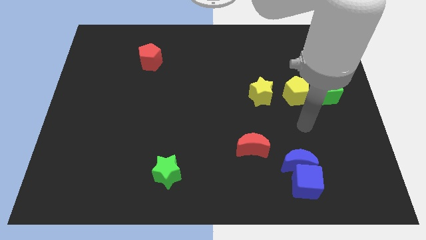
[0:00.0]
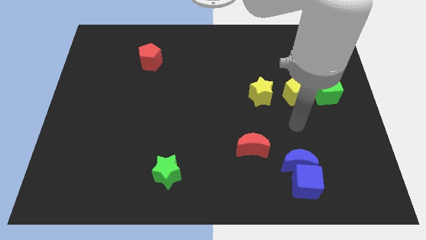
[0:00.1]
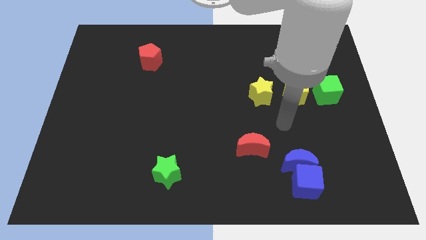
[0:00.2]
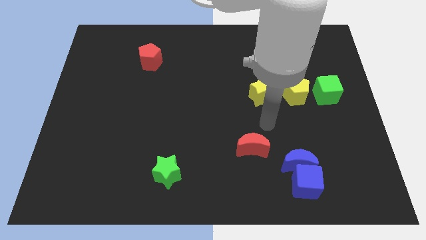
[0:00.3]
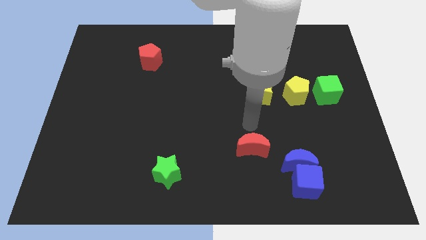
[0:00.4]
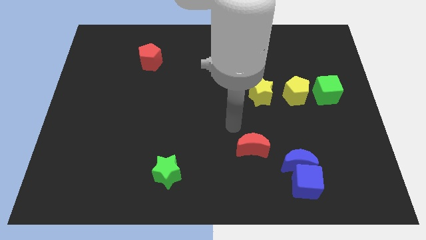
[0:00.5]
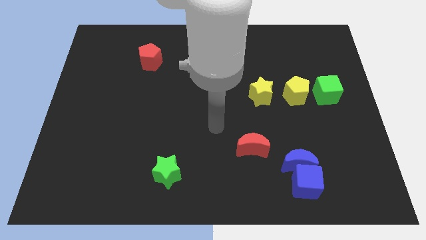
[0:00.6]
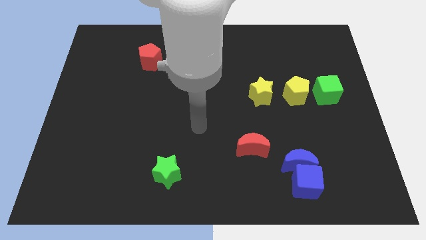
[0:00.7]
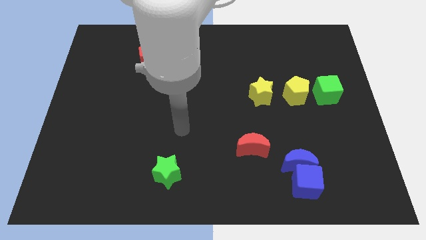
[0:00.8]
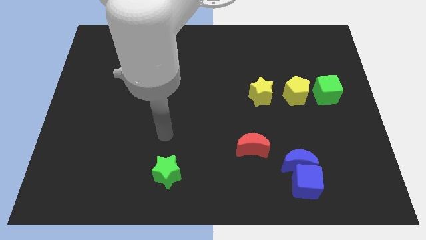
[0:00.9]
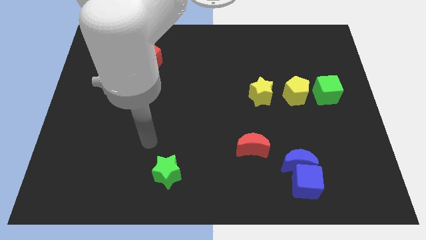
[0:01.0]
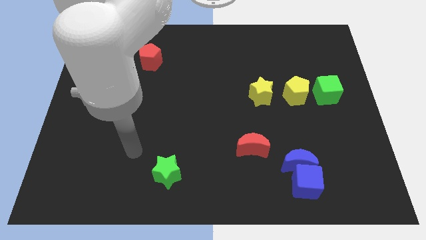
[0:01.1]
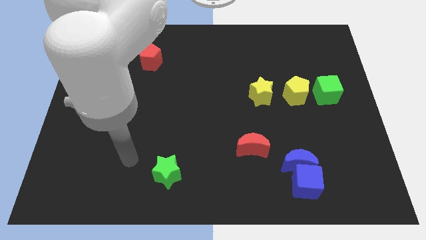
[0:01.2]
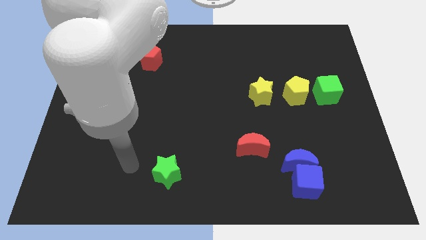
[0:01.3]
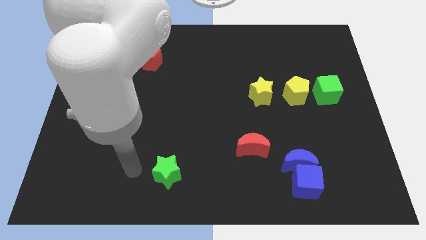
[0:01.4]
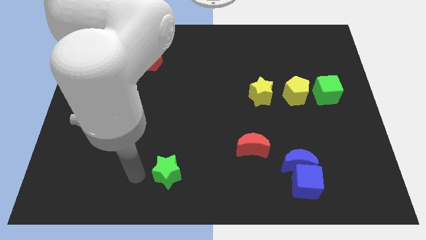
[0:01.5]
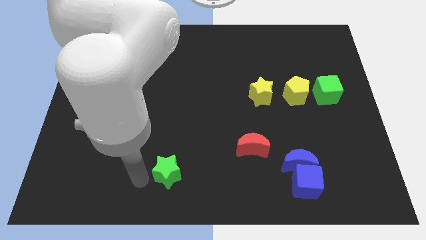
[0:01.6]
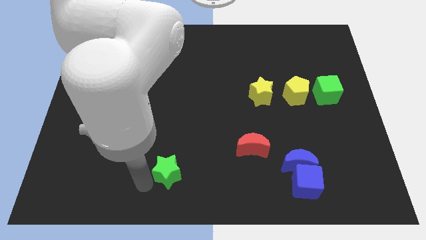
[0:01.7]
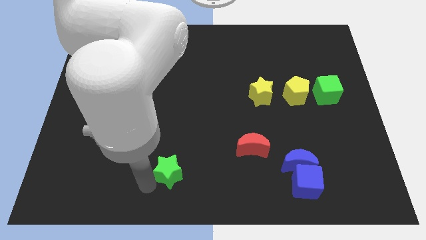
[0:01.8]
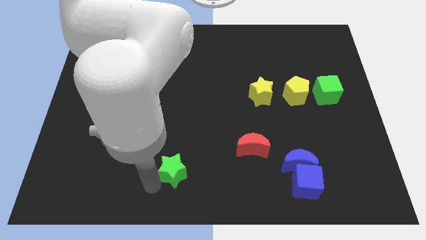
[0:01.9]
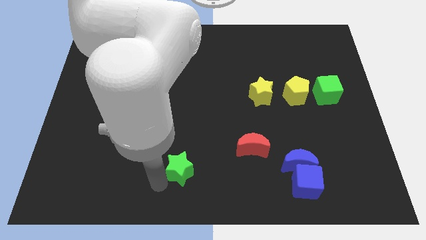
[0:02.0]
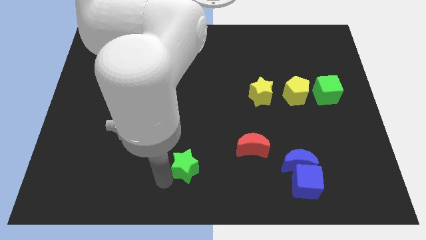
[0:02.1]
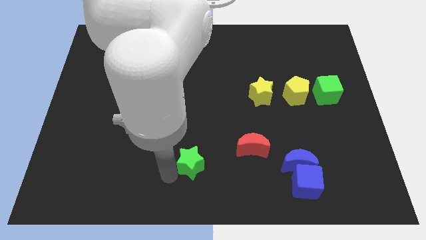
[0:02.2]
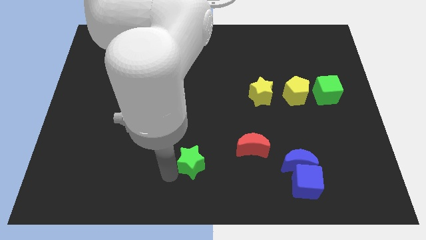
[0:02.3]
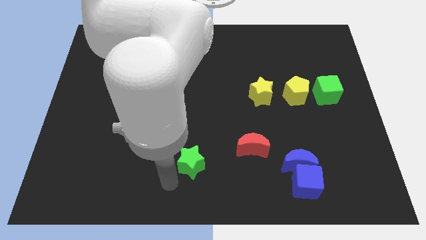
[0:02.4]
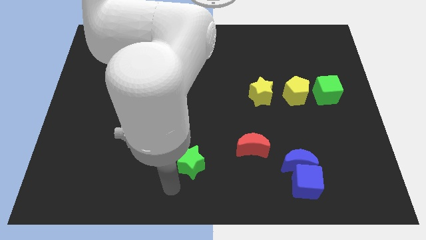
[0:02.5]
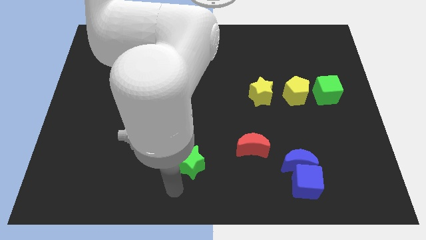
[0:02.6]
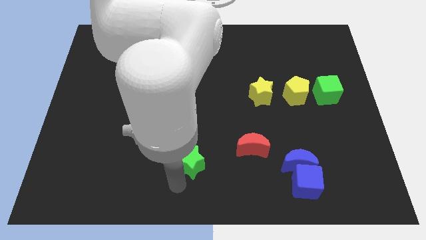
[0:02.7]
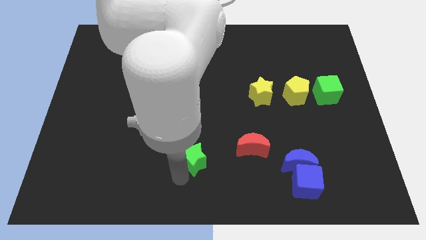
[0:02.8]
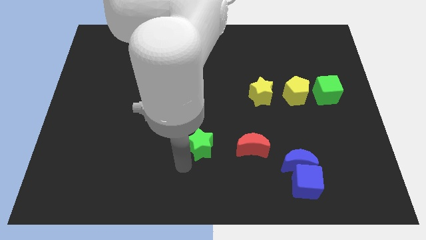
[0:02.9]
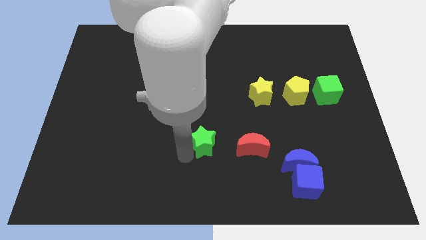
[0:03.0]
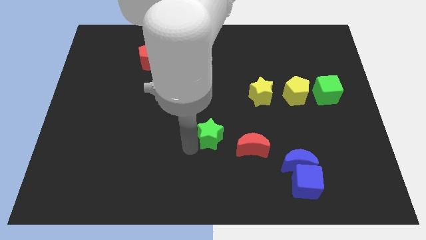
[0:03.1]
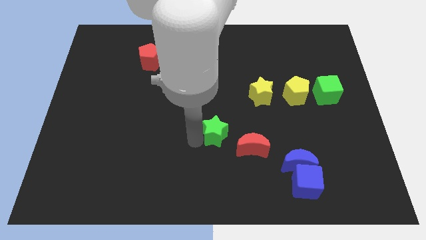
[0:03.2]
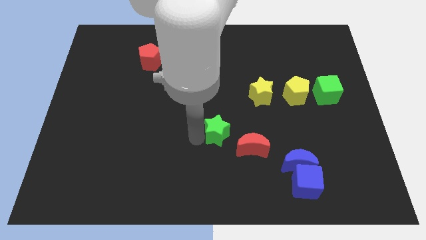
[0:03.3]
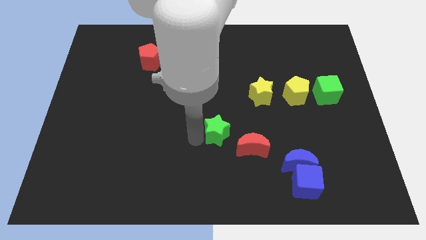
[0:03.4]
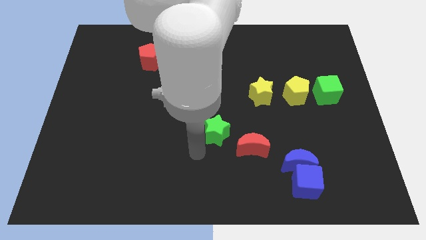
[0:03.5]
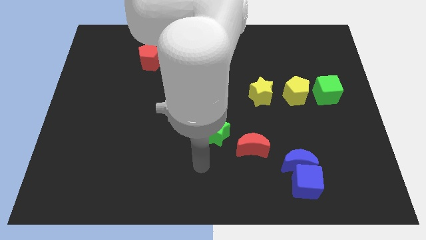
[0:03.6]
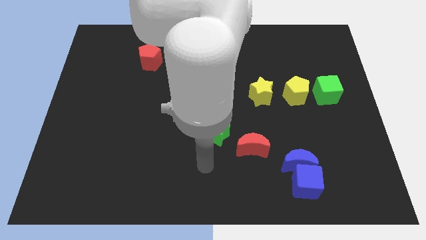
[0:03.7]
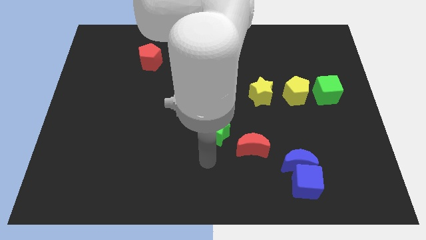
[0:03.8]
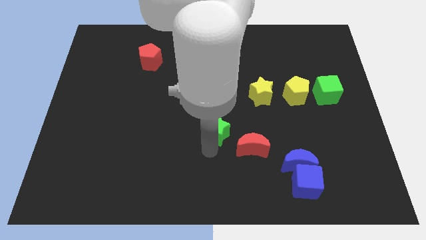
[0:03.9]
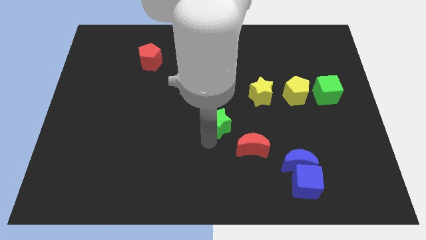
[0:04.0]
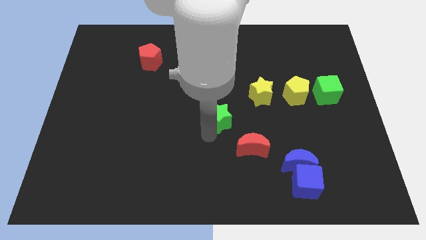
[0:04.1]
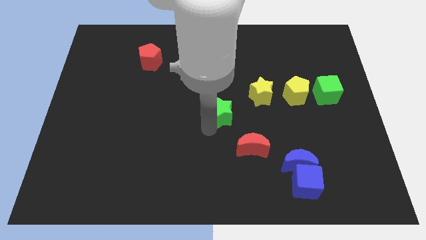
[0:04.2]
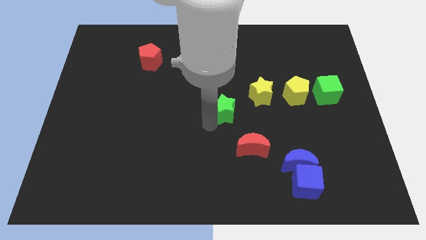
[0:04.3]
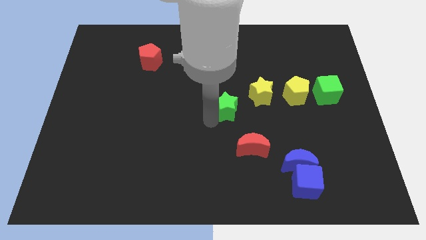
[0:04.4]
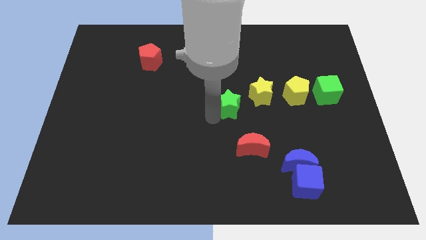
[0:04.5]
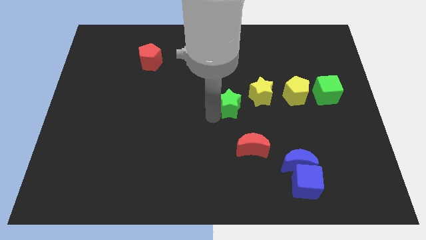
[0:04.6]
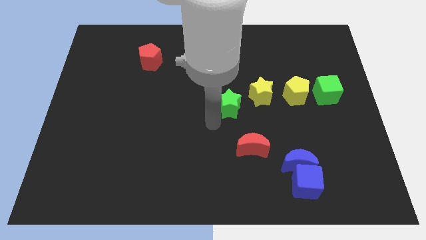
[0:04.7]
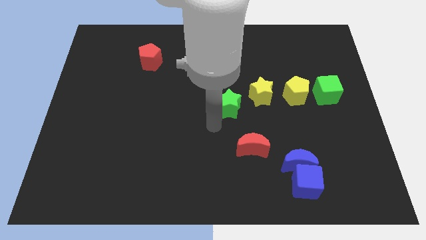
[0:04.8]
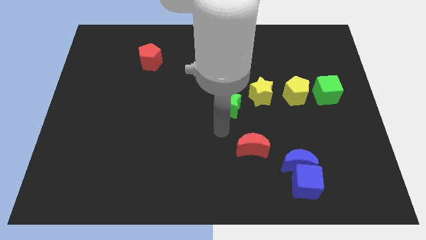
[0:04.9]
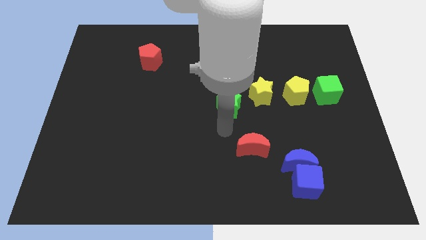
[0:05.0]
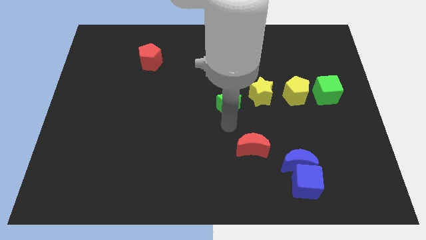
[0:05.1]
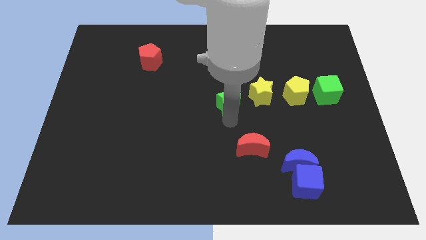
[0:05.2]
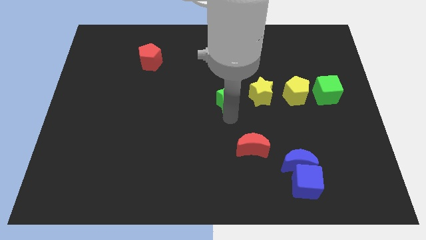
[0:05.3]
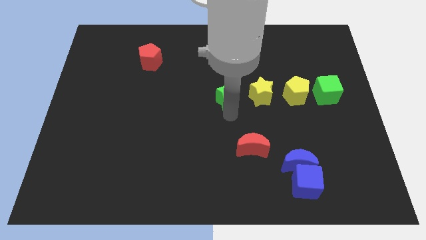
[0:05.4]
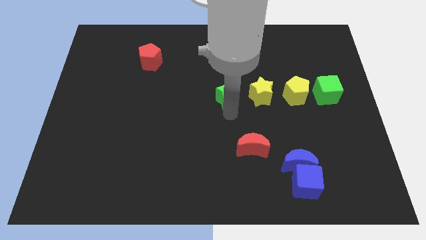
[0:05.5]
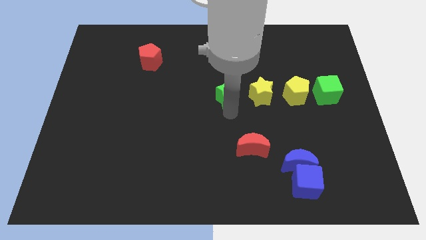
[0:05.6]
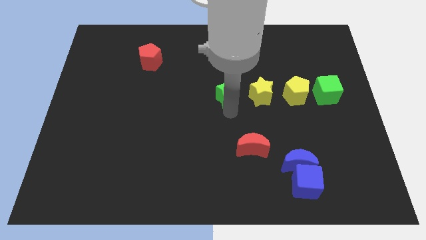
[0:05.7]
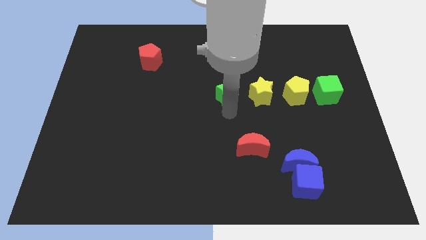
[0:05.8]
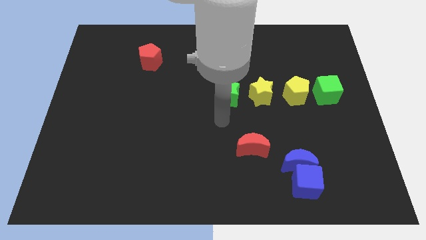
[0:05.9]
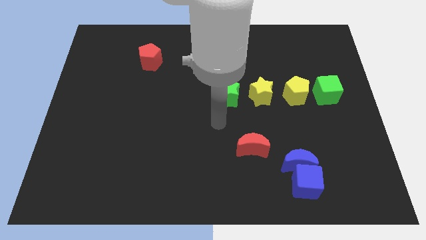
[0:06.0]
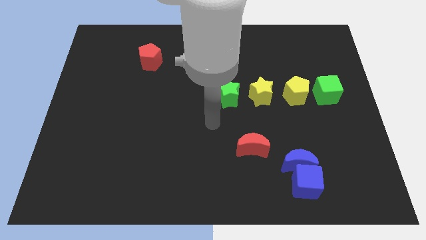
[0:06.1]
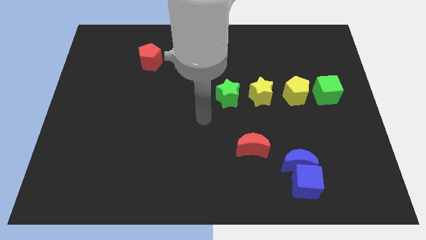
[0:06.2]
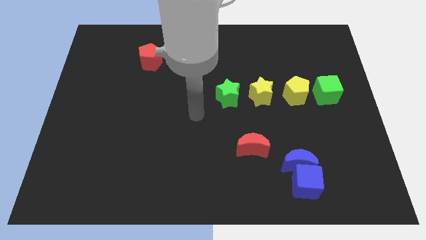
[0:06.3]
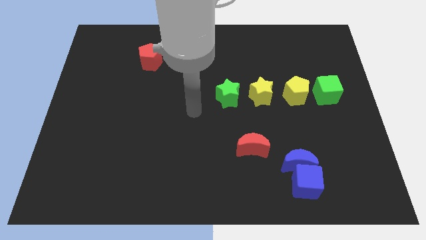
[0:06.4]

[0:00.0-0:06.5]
place green star beside the yellow star to form a horizontal line

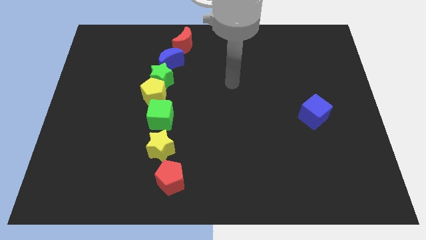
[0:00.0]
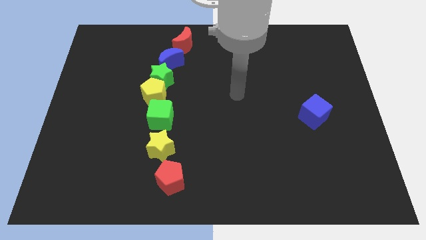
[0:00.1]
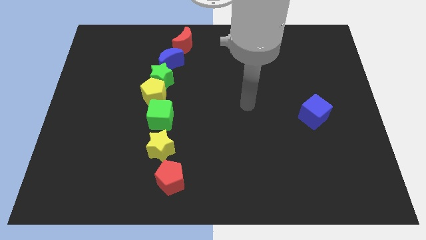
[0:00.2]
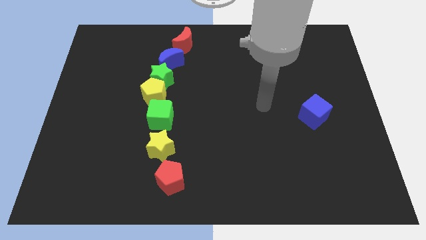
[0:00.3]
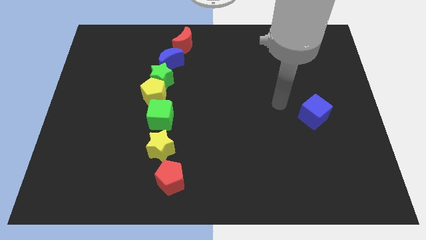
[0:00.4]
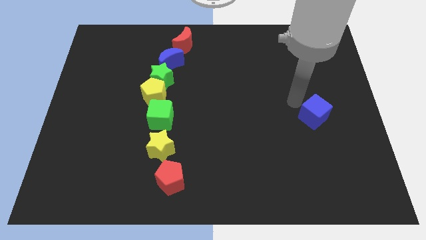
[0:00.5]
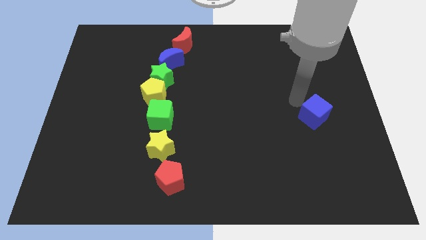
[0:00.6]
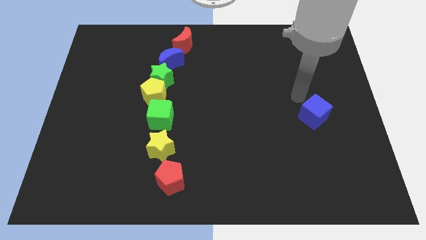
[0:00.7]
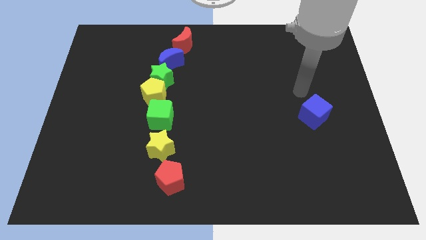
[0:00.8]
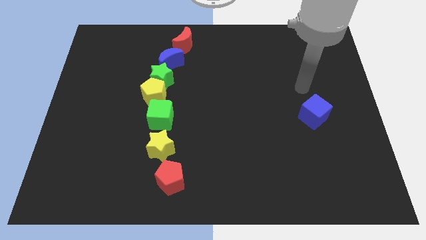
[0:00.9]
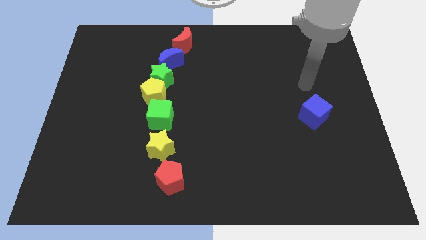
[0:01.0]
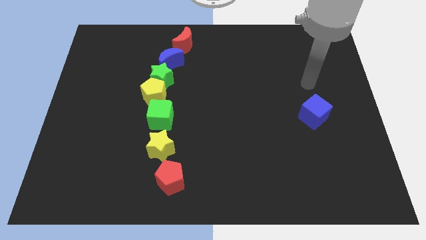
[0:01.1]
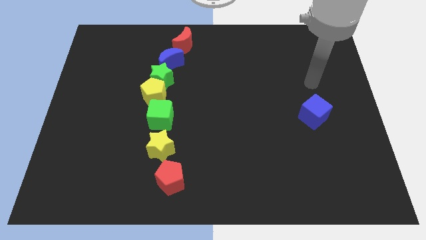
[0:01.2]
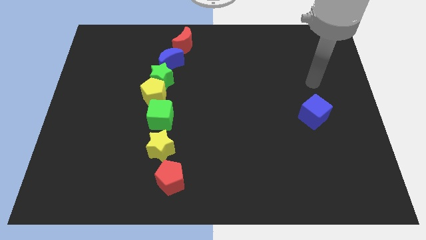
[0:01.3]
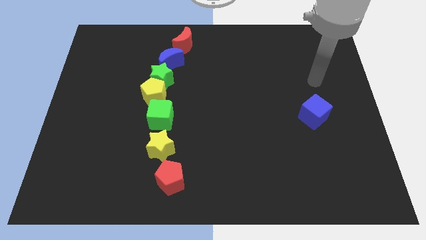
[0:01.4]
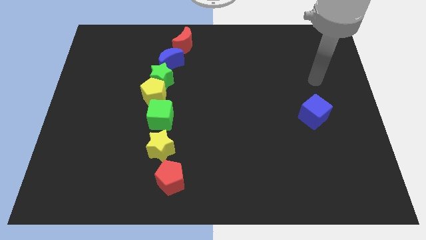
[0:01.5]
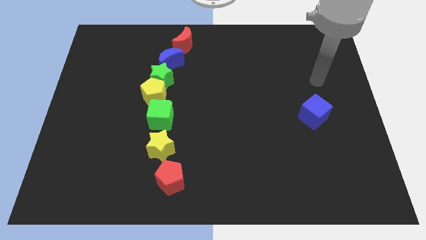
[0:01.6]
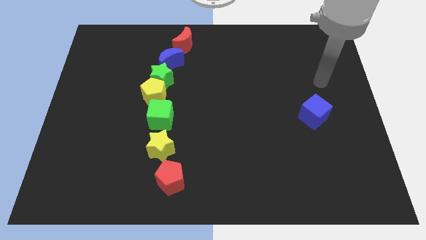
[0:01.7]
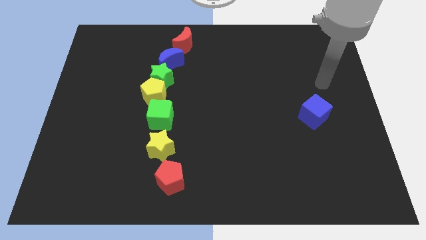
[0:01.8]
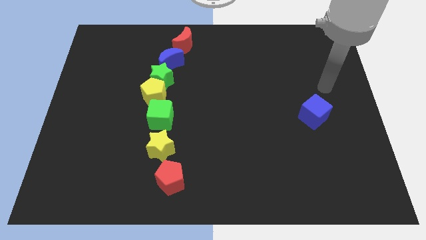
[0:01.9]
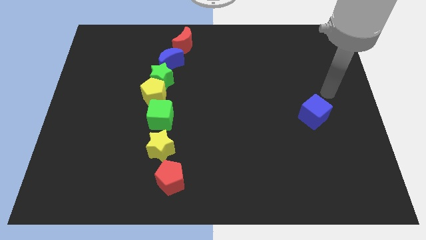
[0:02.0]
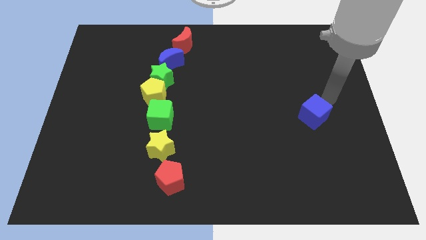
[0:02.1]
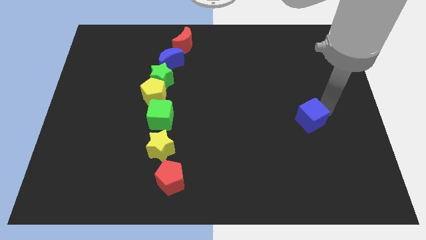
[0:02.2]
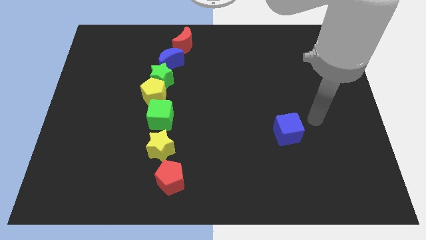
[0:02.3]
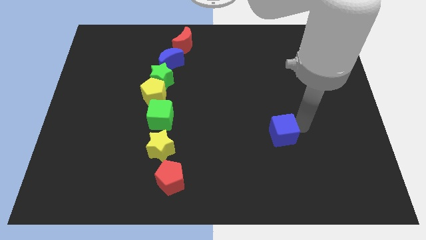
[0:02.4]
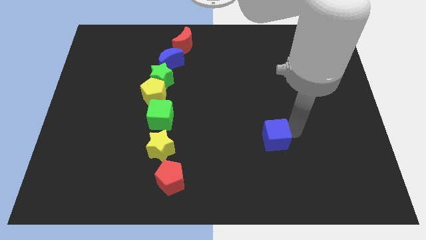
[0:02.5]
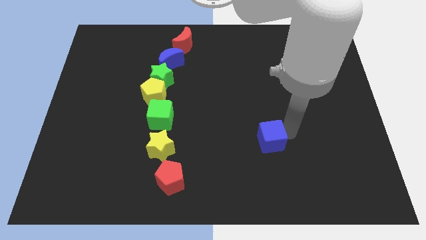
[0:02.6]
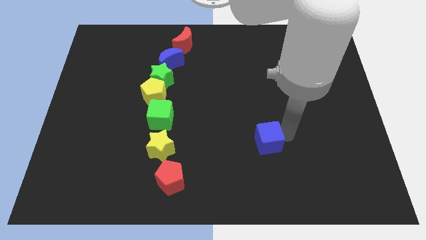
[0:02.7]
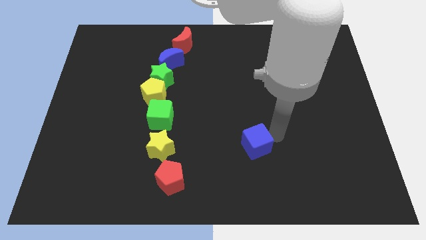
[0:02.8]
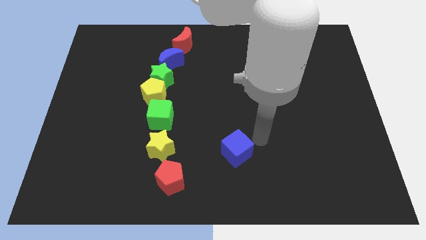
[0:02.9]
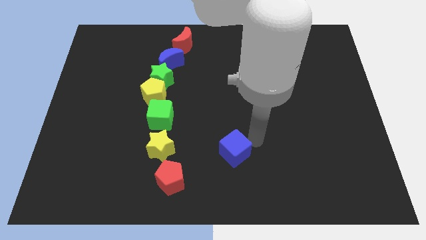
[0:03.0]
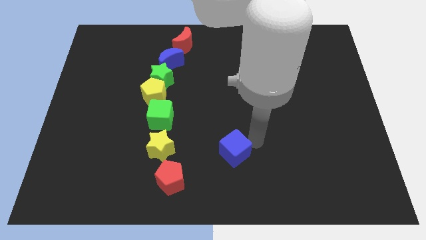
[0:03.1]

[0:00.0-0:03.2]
slide the blue cube towards the right side of the red pentagon
